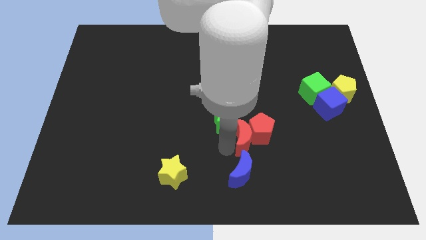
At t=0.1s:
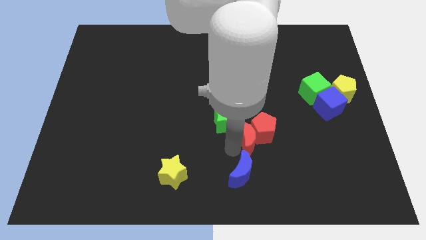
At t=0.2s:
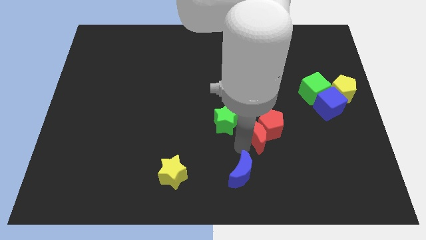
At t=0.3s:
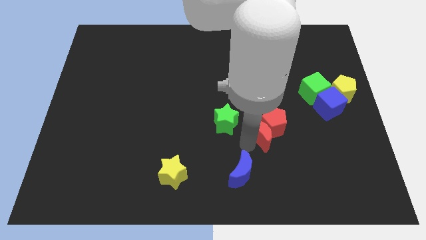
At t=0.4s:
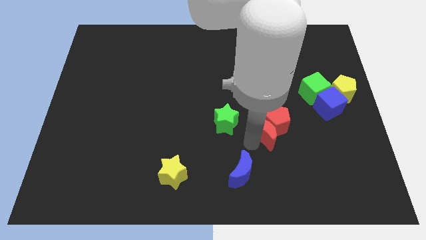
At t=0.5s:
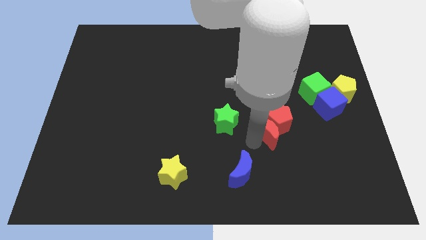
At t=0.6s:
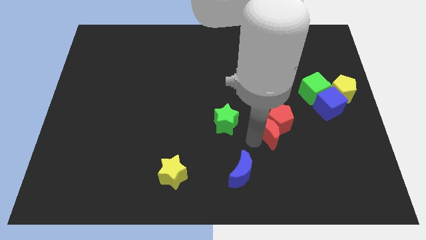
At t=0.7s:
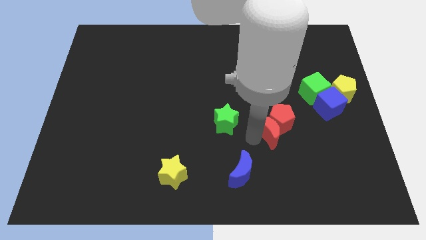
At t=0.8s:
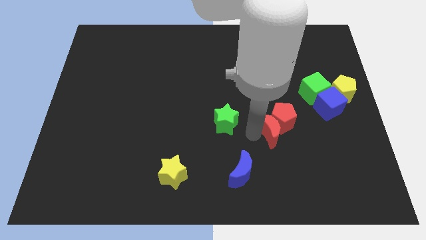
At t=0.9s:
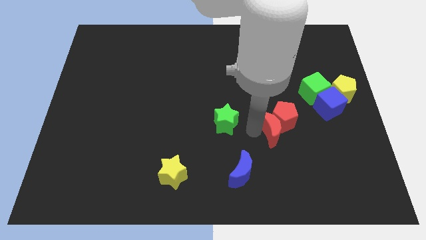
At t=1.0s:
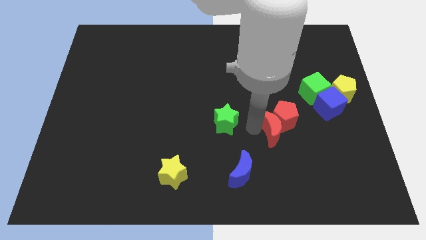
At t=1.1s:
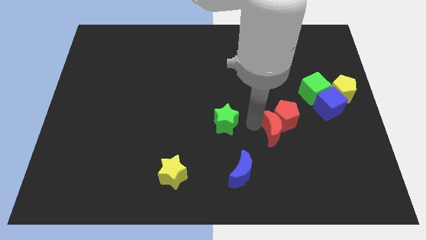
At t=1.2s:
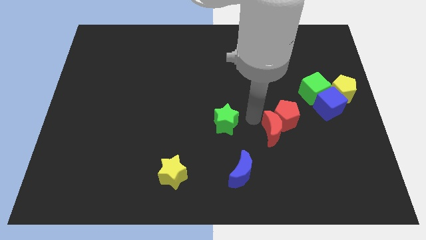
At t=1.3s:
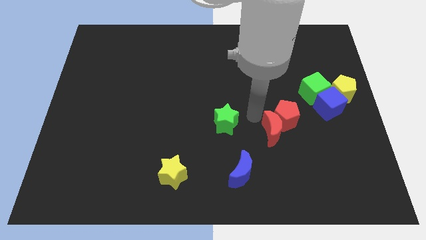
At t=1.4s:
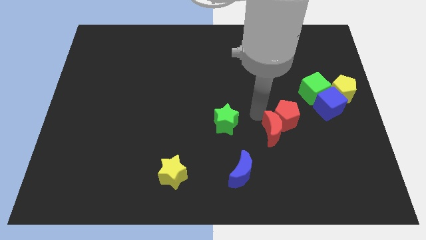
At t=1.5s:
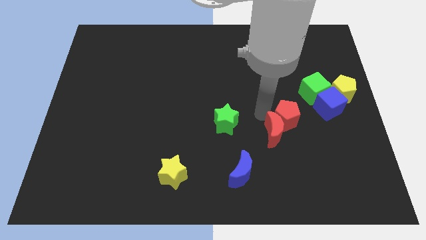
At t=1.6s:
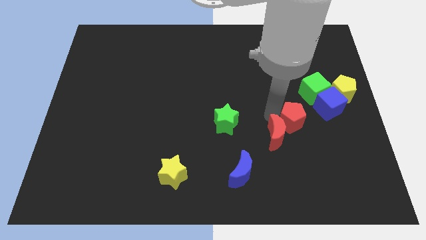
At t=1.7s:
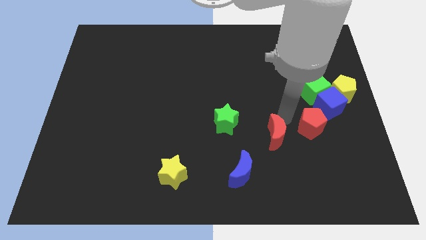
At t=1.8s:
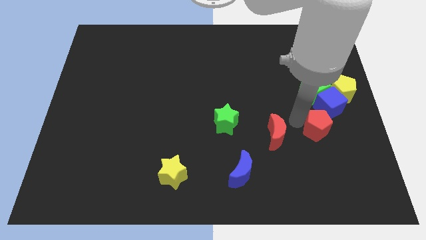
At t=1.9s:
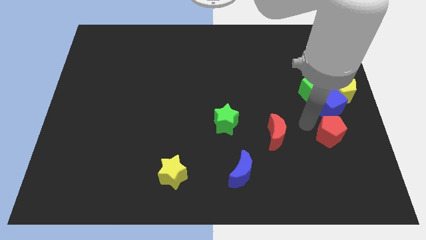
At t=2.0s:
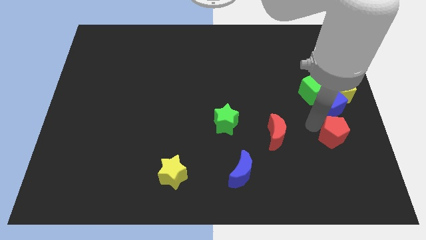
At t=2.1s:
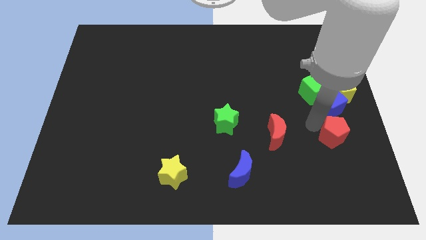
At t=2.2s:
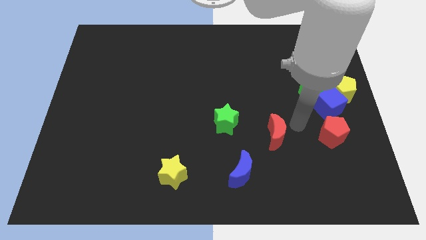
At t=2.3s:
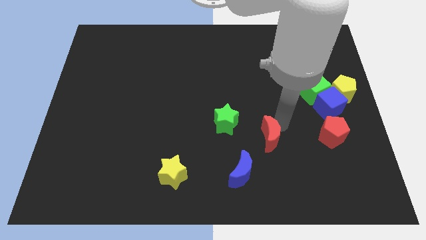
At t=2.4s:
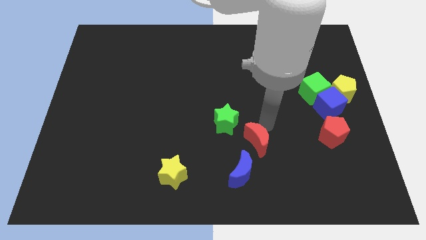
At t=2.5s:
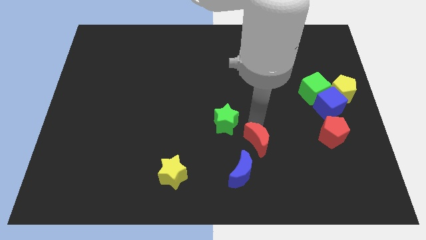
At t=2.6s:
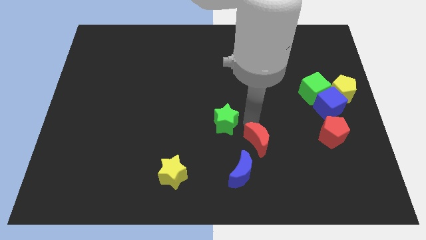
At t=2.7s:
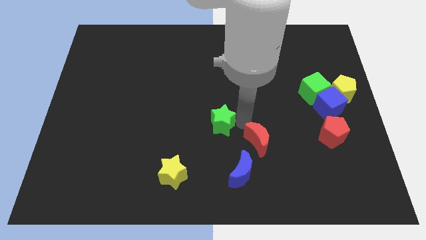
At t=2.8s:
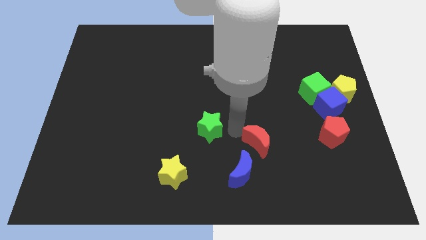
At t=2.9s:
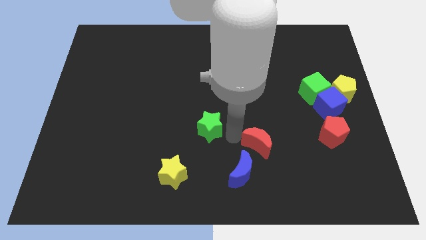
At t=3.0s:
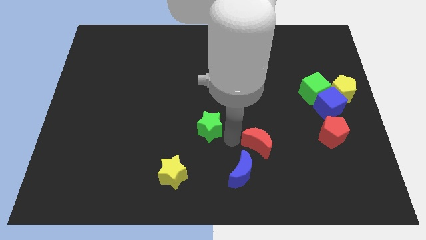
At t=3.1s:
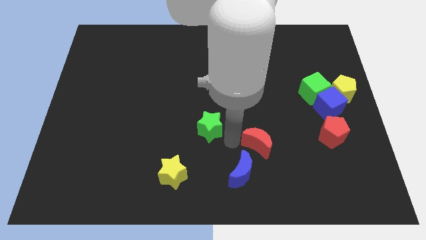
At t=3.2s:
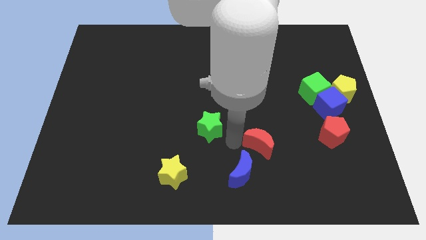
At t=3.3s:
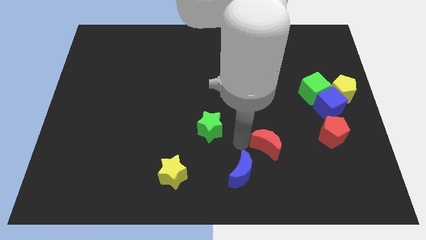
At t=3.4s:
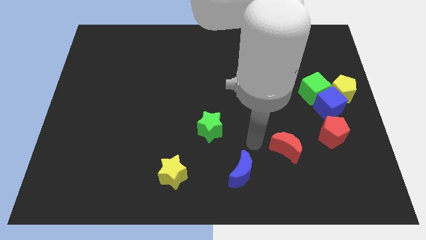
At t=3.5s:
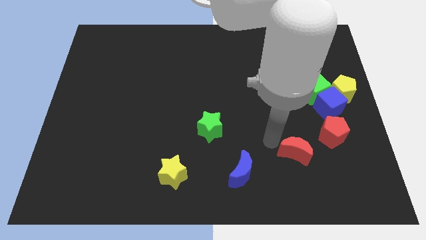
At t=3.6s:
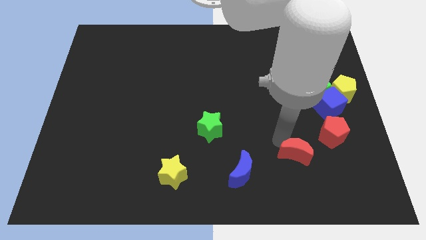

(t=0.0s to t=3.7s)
separate red crescent from red pentagon

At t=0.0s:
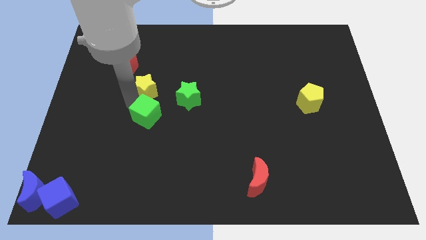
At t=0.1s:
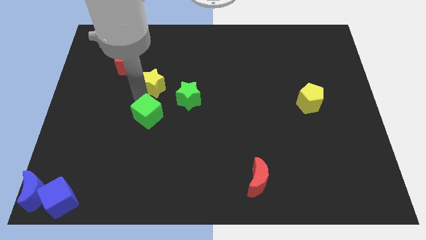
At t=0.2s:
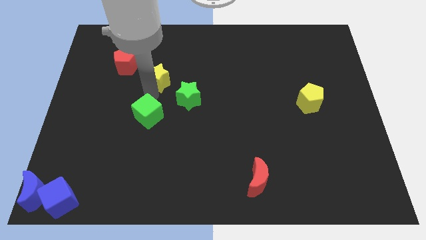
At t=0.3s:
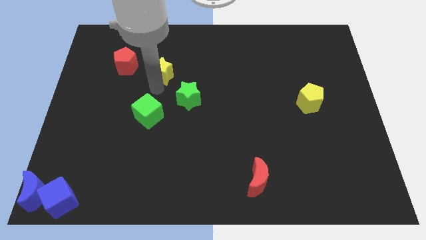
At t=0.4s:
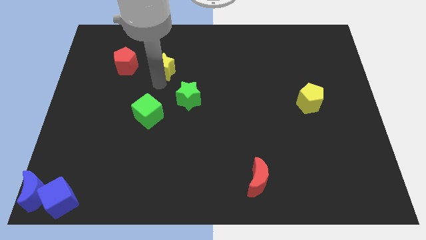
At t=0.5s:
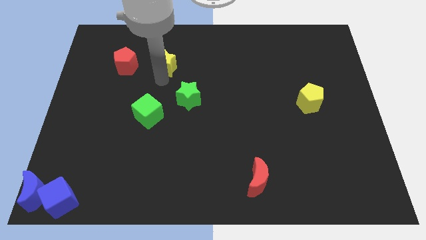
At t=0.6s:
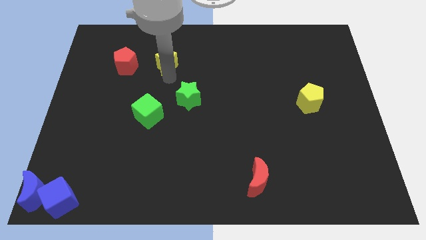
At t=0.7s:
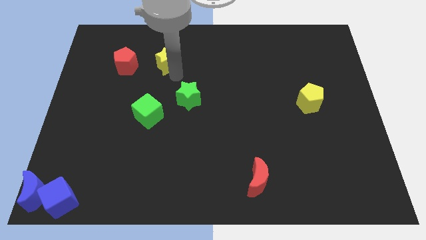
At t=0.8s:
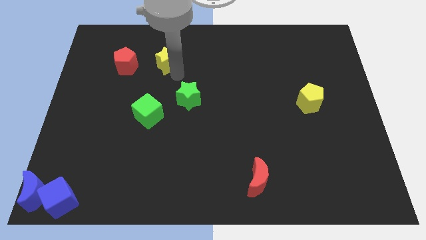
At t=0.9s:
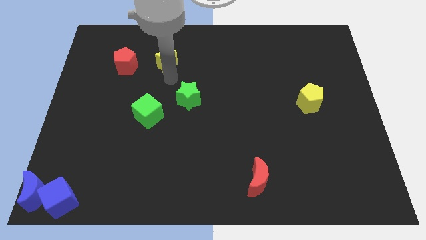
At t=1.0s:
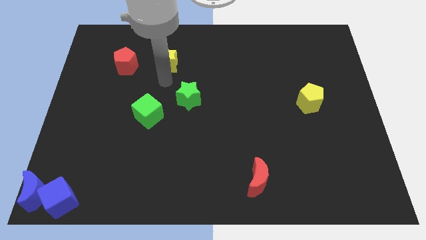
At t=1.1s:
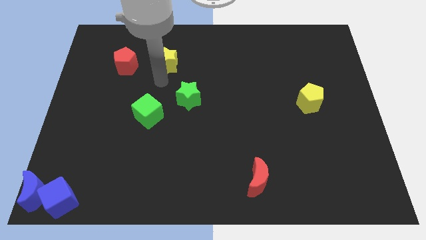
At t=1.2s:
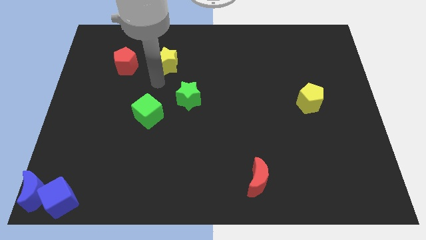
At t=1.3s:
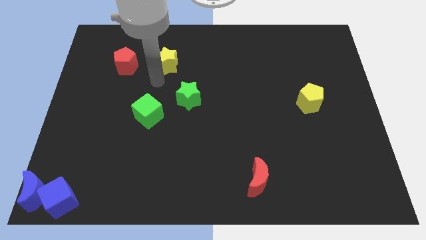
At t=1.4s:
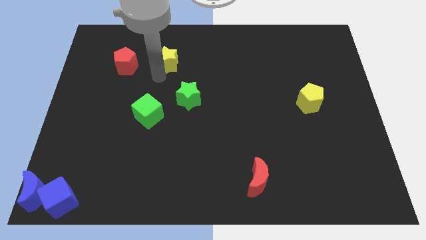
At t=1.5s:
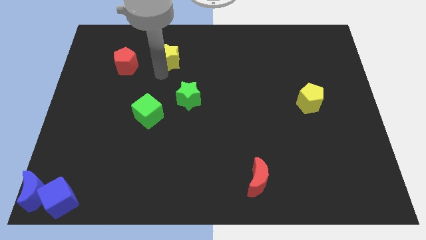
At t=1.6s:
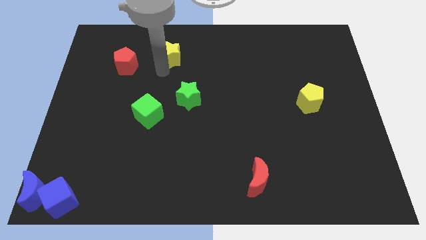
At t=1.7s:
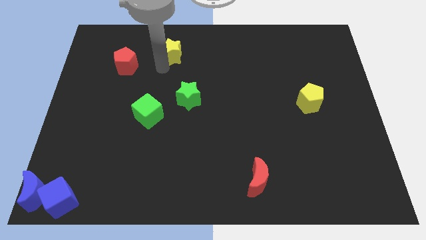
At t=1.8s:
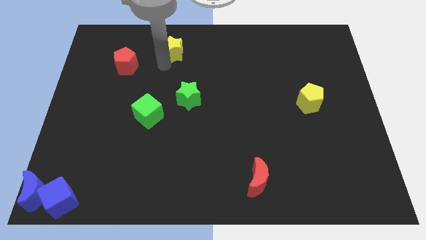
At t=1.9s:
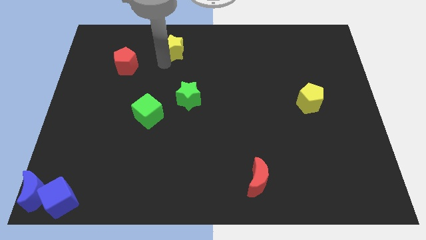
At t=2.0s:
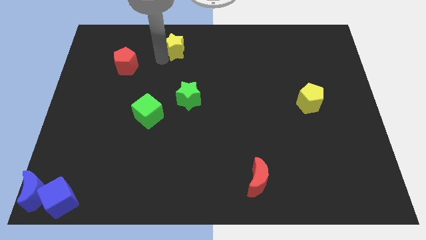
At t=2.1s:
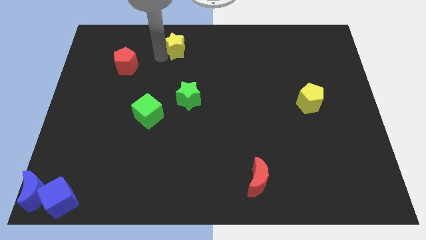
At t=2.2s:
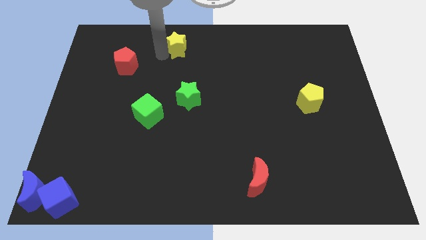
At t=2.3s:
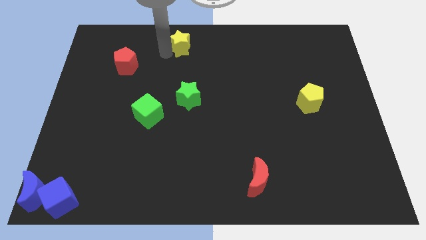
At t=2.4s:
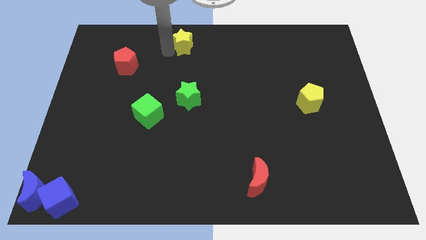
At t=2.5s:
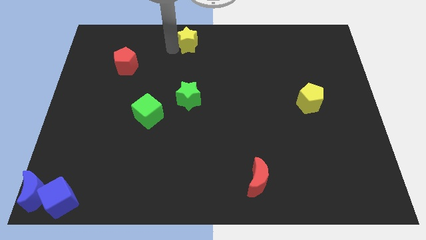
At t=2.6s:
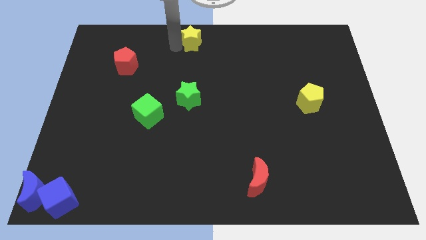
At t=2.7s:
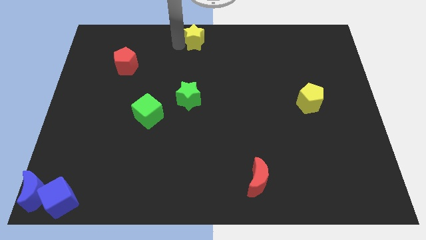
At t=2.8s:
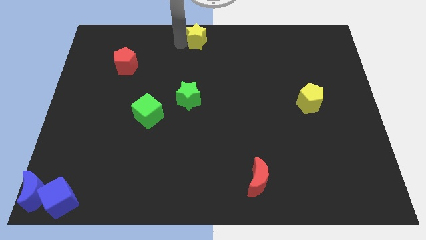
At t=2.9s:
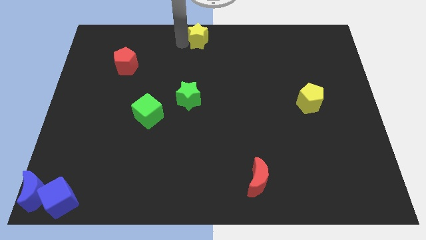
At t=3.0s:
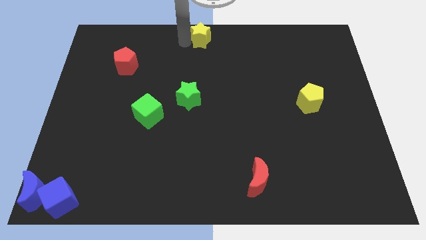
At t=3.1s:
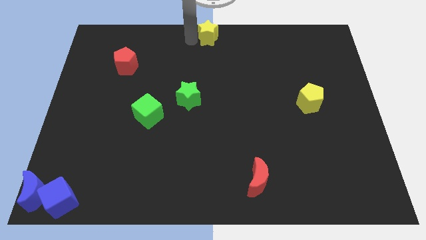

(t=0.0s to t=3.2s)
place the yellow star towards the top center of the board

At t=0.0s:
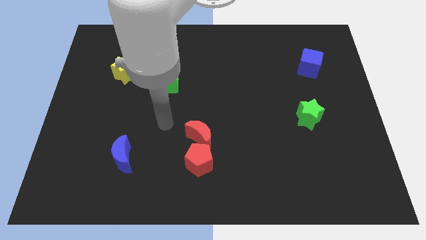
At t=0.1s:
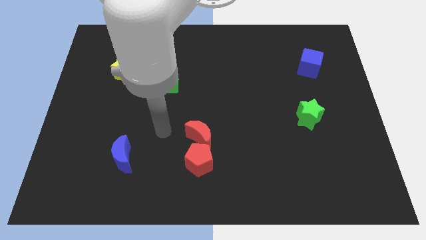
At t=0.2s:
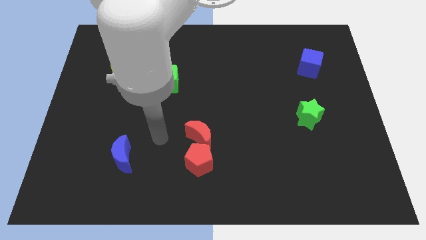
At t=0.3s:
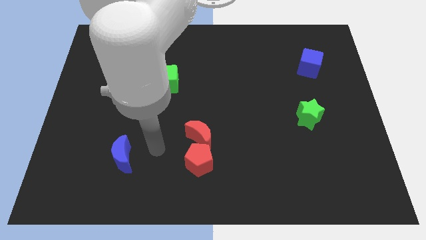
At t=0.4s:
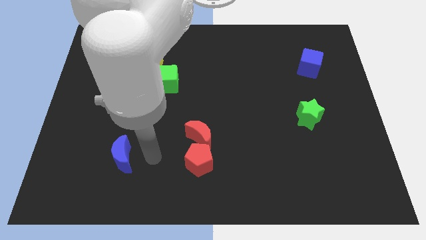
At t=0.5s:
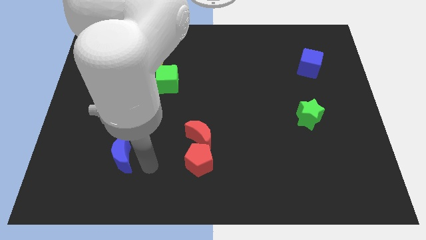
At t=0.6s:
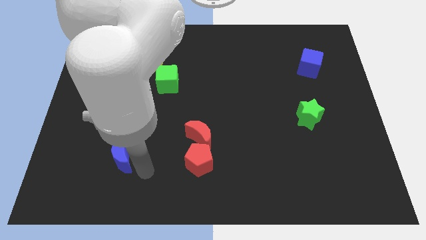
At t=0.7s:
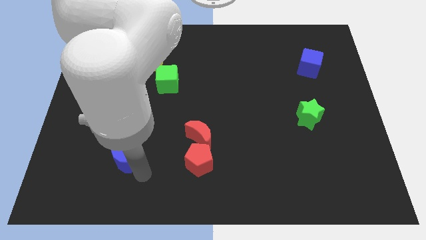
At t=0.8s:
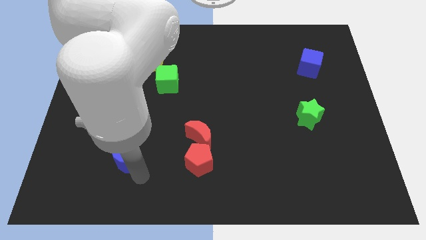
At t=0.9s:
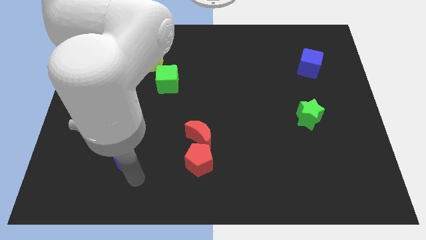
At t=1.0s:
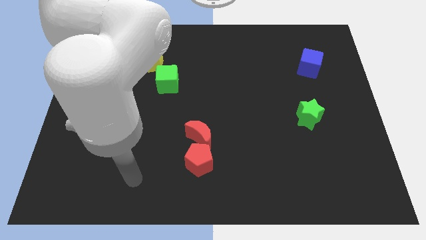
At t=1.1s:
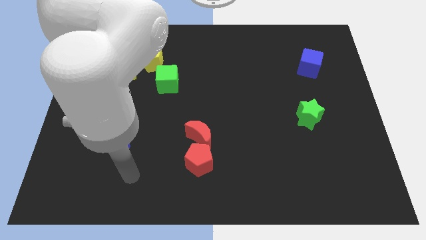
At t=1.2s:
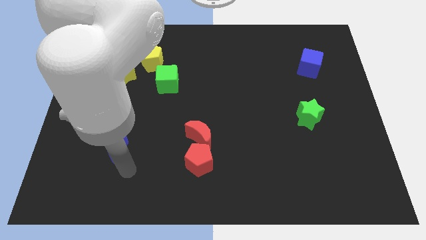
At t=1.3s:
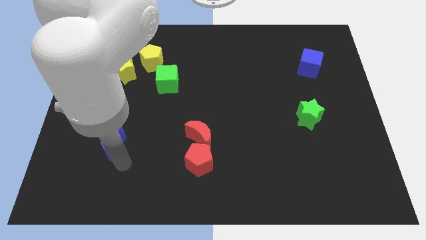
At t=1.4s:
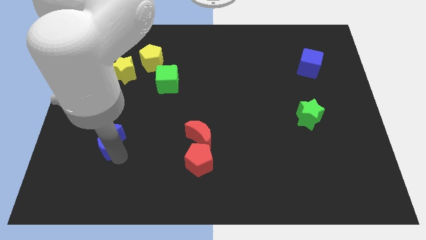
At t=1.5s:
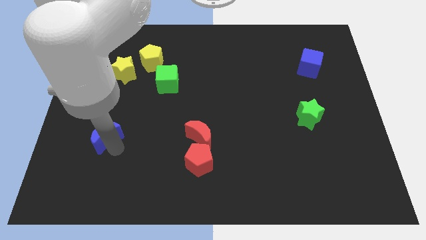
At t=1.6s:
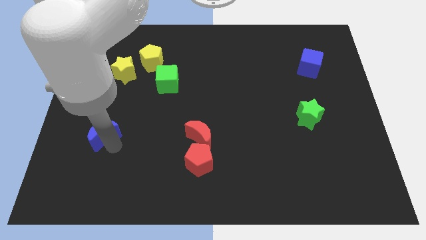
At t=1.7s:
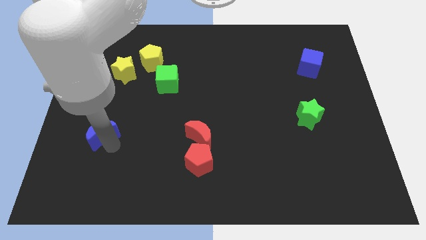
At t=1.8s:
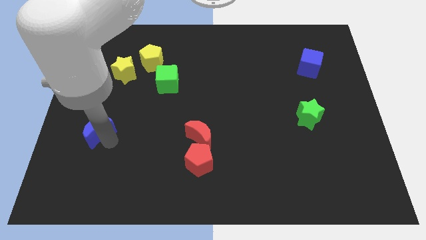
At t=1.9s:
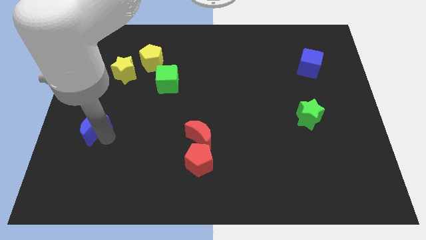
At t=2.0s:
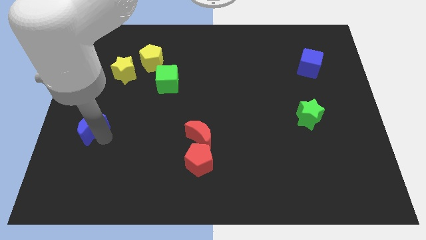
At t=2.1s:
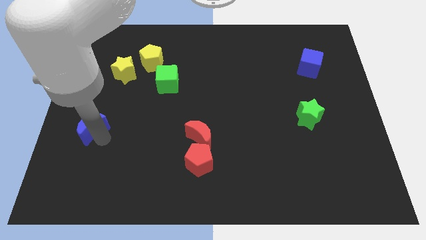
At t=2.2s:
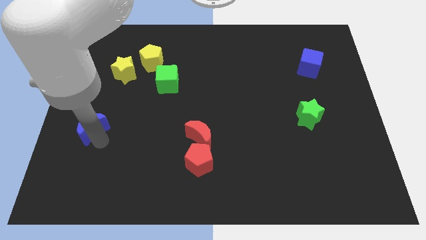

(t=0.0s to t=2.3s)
place the blue crescent to the left of the red moon
